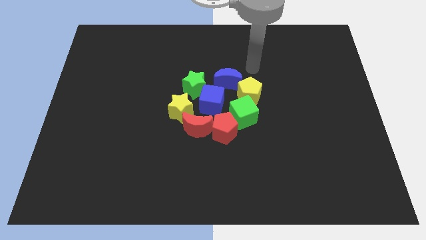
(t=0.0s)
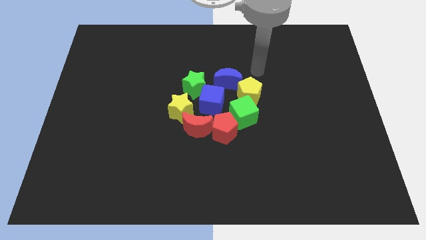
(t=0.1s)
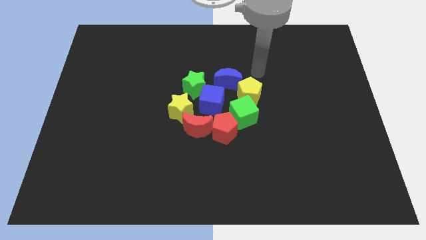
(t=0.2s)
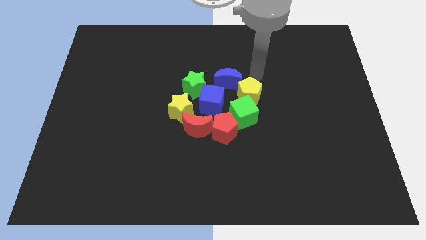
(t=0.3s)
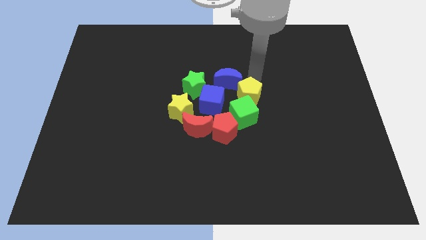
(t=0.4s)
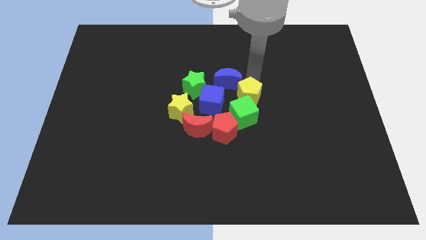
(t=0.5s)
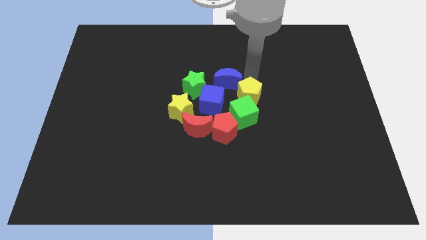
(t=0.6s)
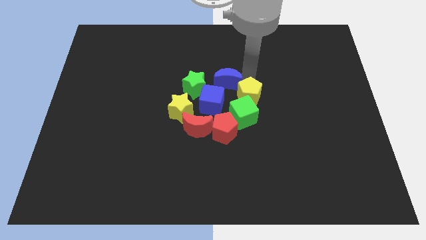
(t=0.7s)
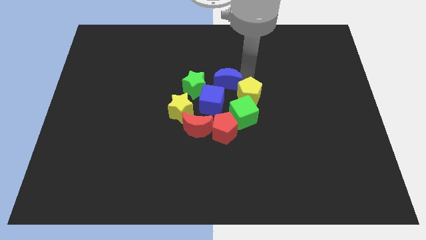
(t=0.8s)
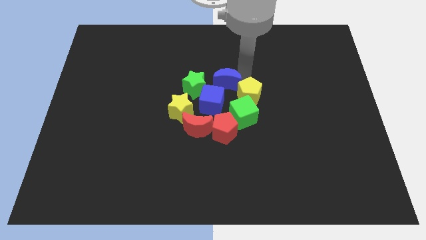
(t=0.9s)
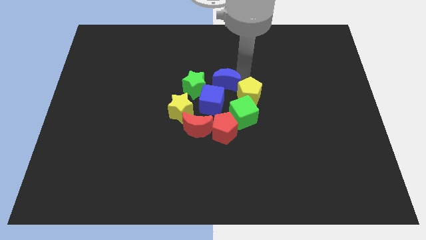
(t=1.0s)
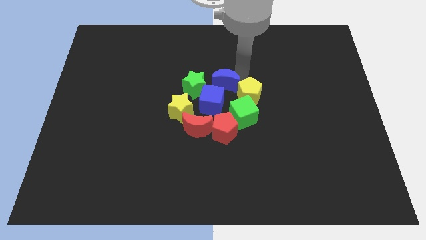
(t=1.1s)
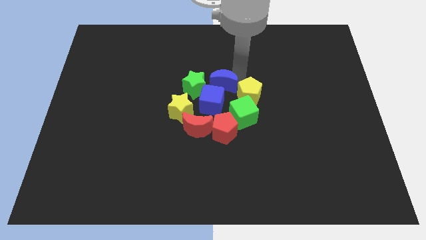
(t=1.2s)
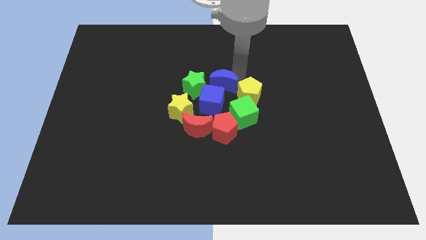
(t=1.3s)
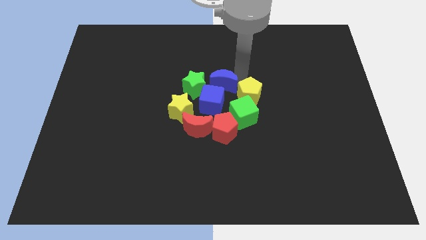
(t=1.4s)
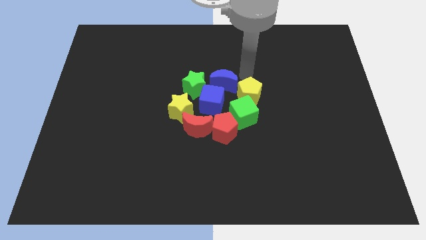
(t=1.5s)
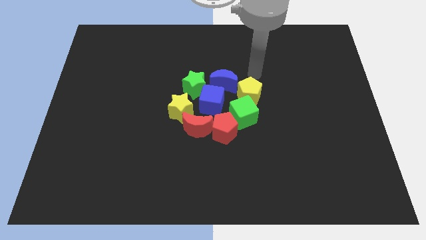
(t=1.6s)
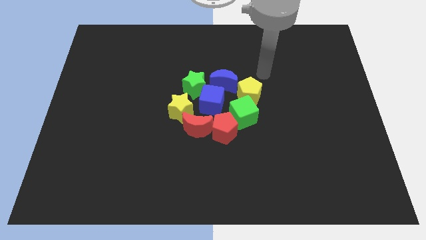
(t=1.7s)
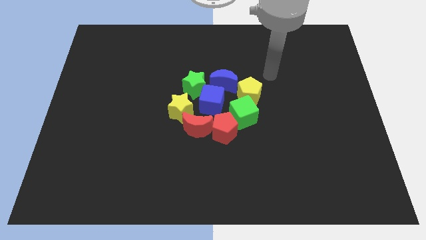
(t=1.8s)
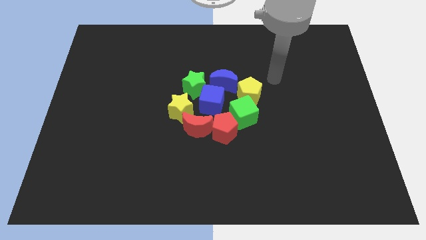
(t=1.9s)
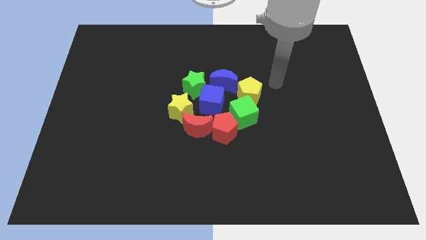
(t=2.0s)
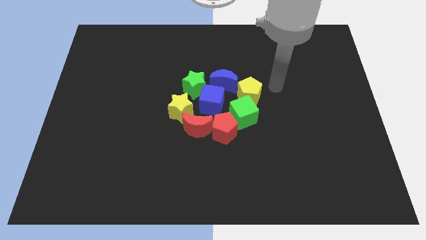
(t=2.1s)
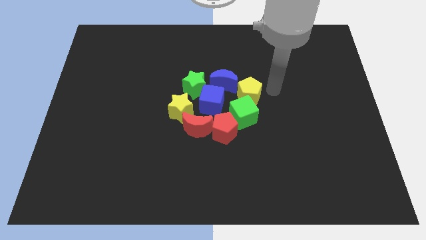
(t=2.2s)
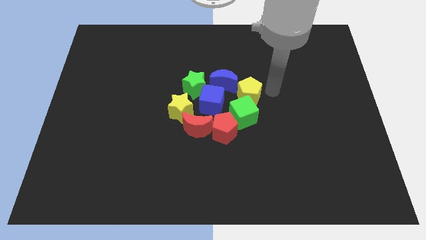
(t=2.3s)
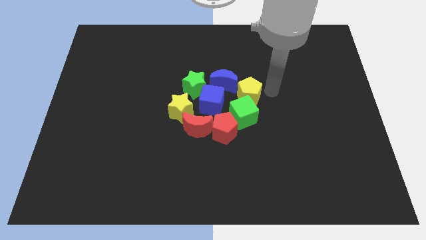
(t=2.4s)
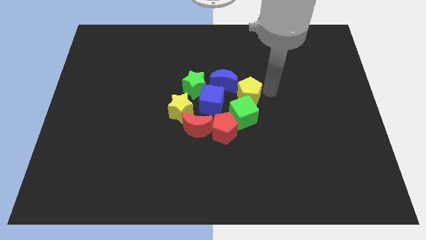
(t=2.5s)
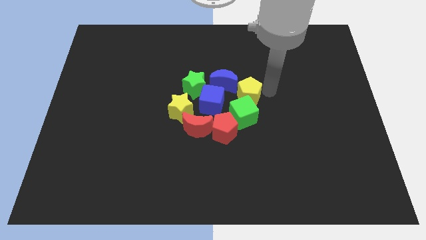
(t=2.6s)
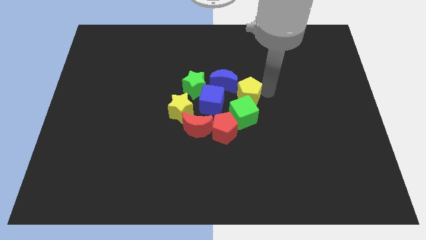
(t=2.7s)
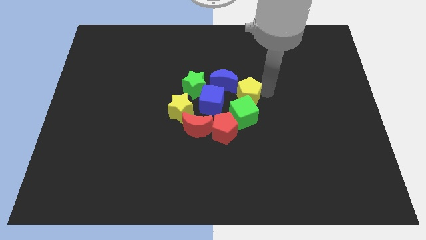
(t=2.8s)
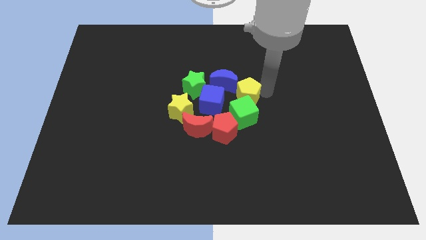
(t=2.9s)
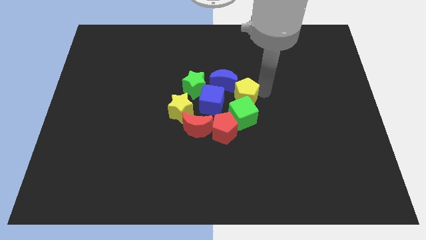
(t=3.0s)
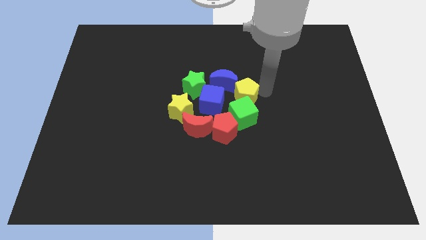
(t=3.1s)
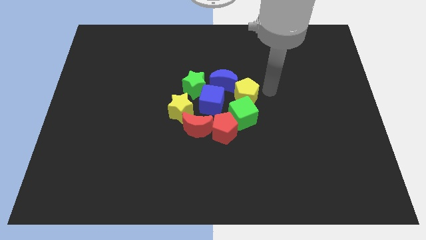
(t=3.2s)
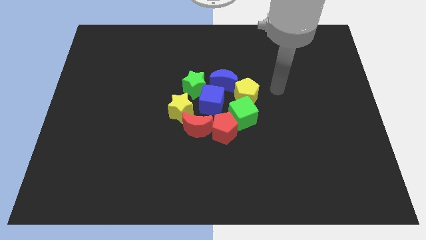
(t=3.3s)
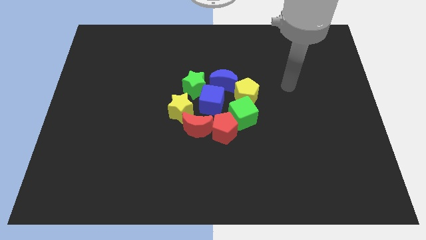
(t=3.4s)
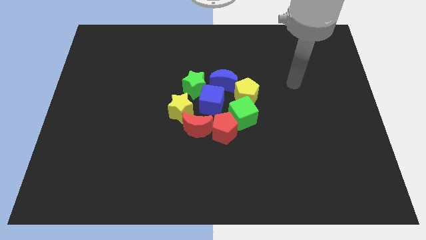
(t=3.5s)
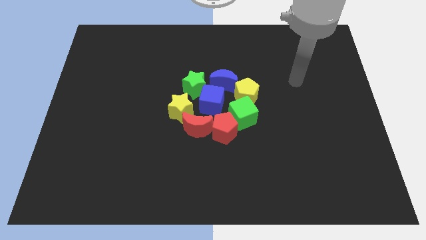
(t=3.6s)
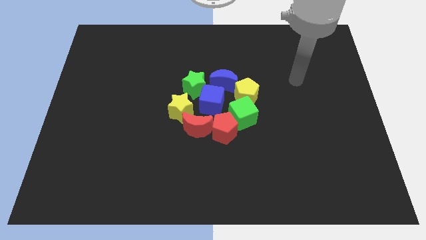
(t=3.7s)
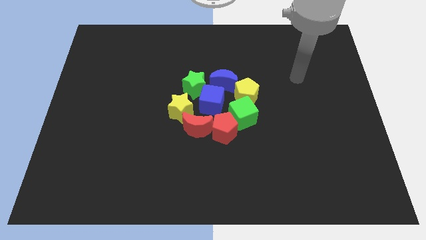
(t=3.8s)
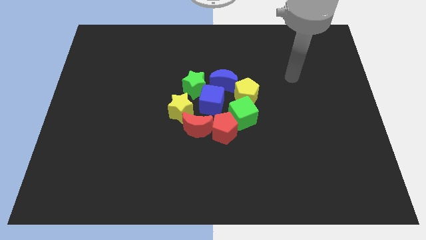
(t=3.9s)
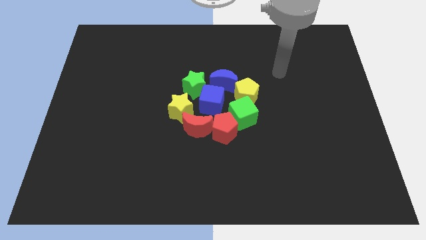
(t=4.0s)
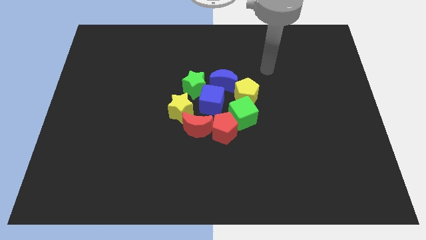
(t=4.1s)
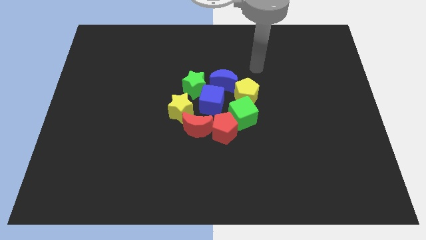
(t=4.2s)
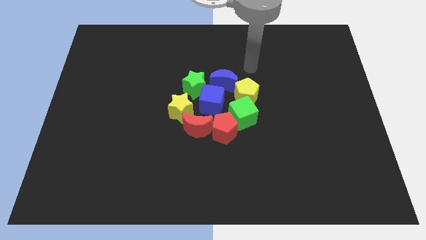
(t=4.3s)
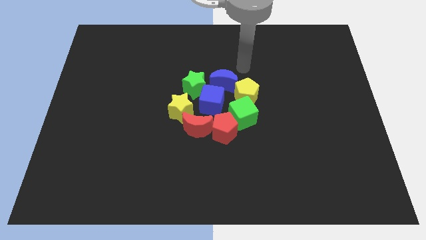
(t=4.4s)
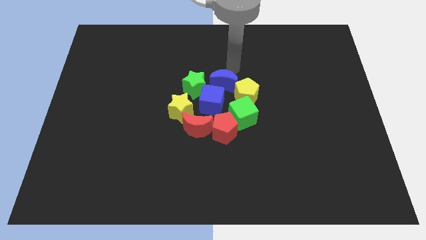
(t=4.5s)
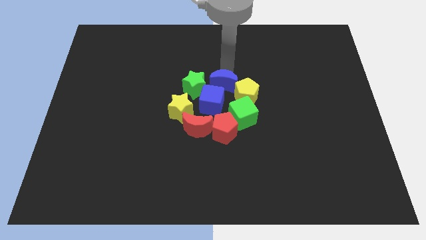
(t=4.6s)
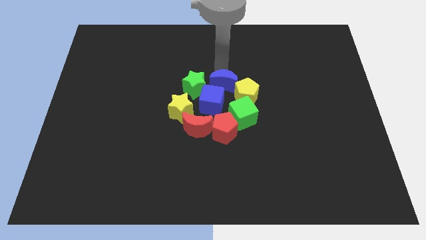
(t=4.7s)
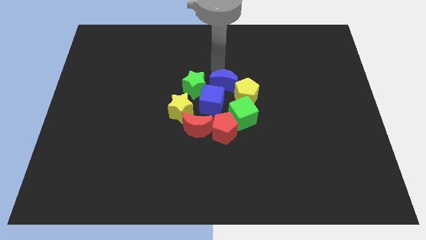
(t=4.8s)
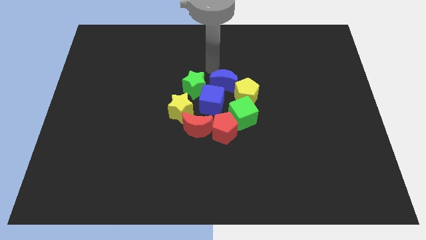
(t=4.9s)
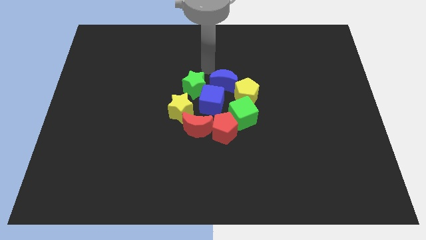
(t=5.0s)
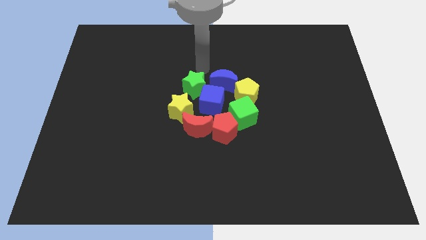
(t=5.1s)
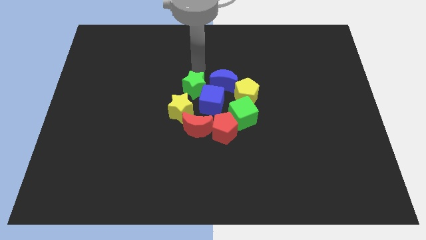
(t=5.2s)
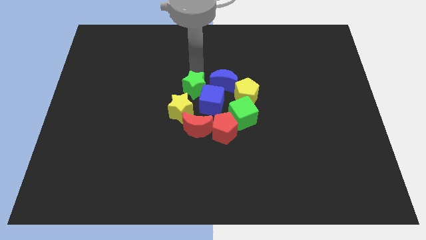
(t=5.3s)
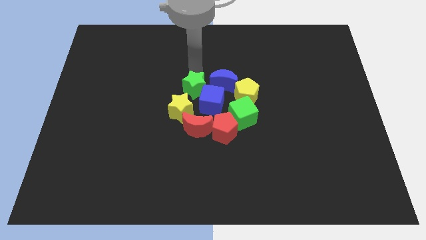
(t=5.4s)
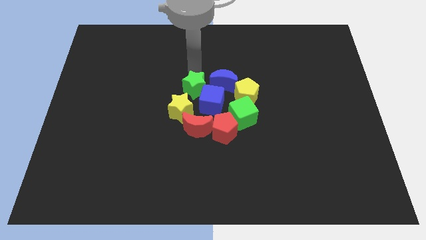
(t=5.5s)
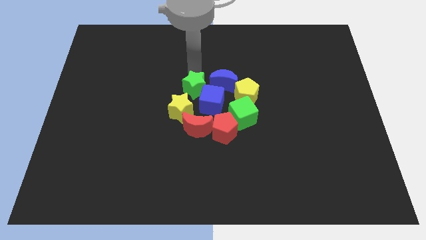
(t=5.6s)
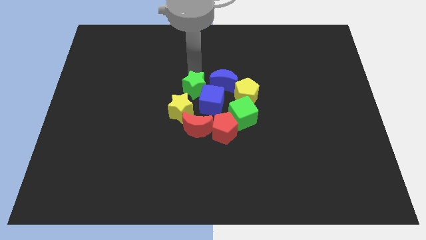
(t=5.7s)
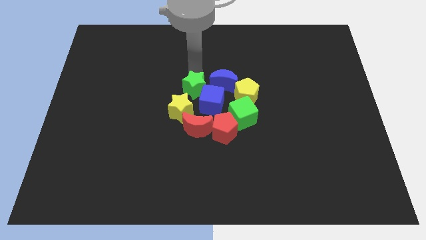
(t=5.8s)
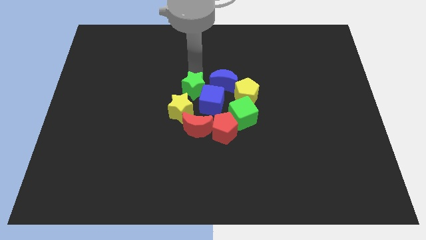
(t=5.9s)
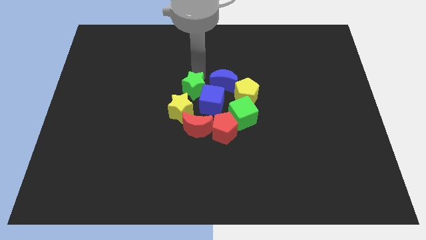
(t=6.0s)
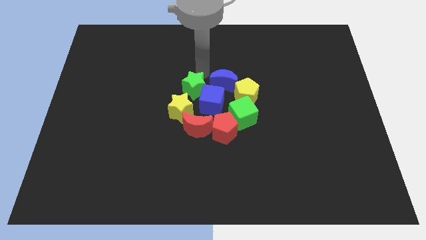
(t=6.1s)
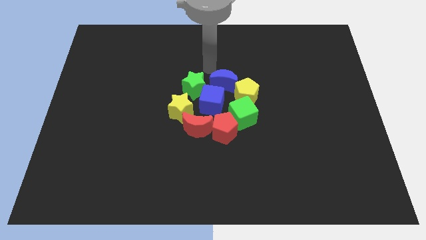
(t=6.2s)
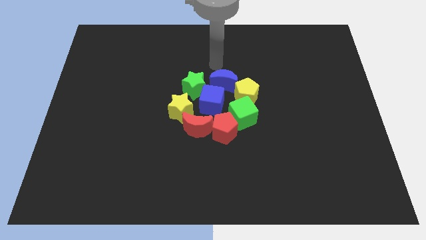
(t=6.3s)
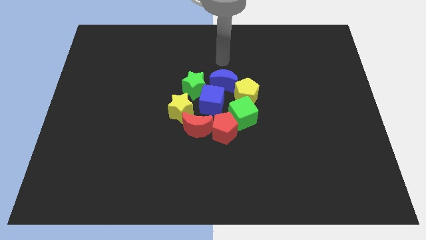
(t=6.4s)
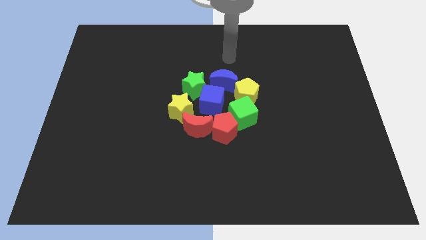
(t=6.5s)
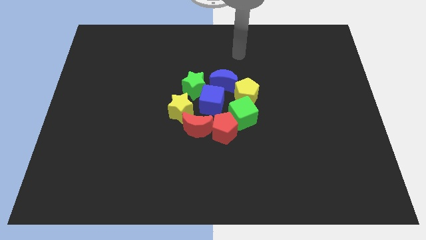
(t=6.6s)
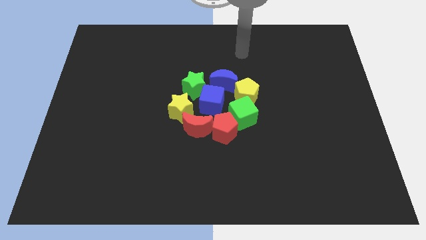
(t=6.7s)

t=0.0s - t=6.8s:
move slightly the yellow pentagon and green star towards the center of the board

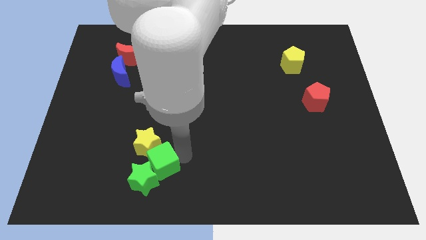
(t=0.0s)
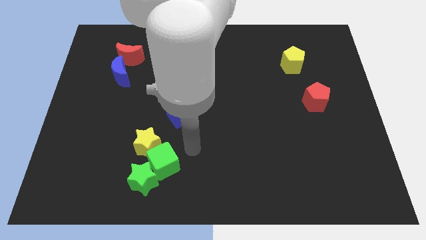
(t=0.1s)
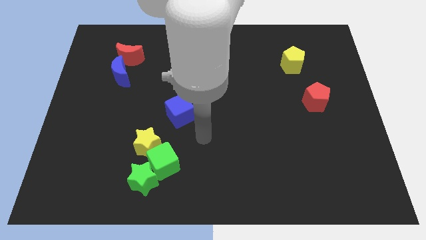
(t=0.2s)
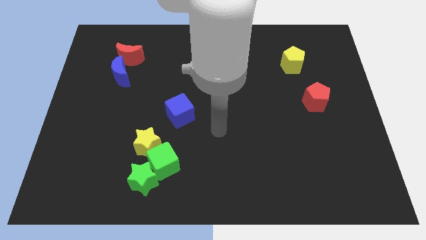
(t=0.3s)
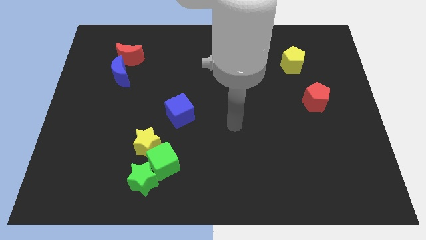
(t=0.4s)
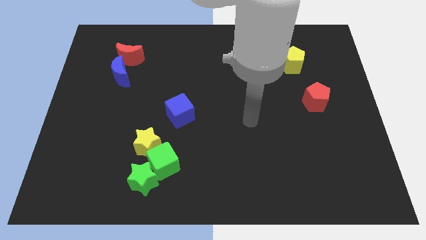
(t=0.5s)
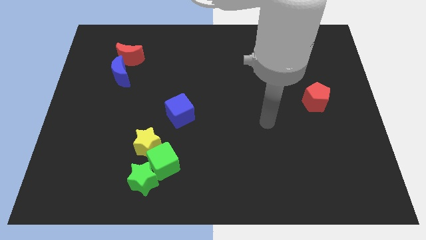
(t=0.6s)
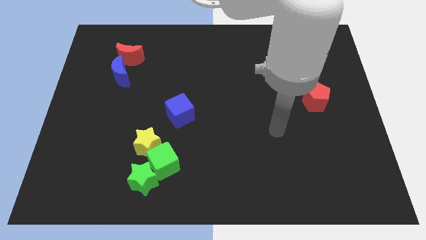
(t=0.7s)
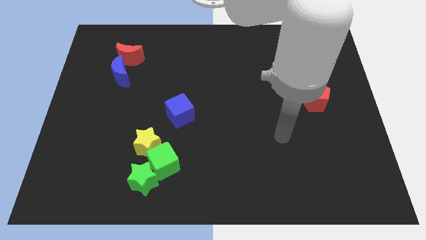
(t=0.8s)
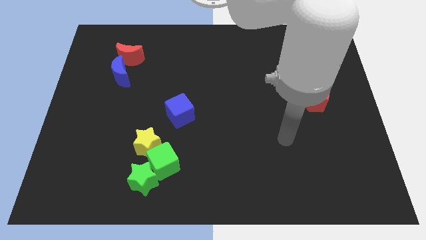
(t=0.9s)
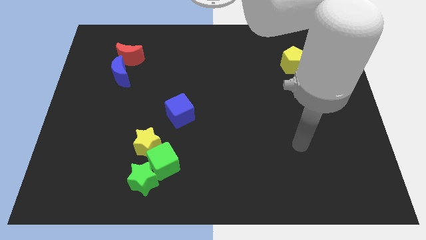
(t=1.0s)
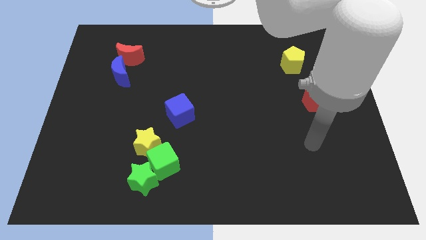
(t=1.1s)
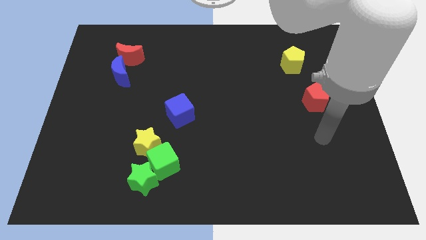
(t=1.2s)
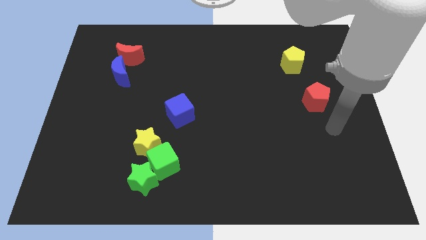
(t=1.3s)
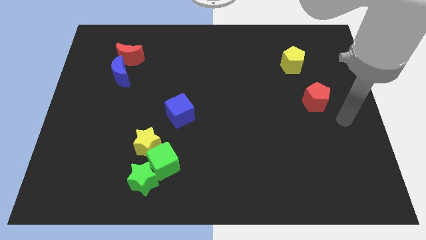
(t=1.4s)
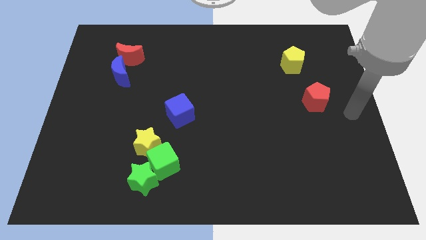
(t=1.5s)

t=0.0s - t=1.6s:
move the arm away from the green cube

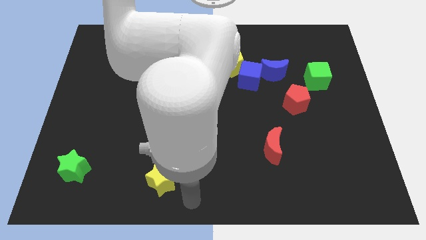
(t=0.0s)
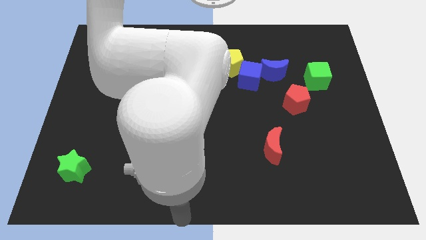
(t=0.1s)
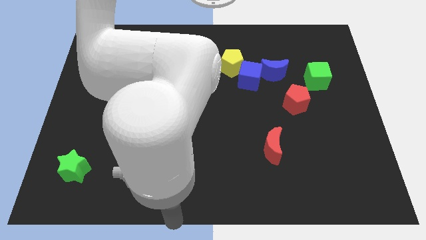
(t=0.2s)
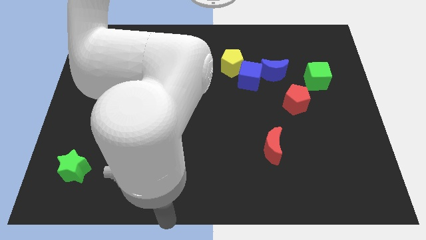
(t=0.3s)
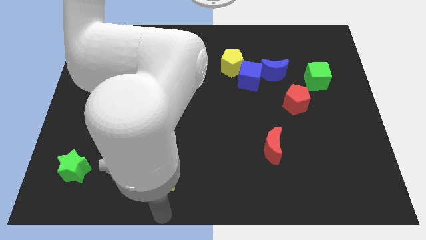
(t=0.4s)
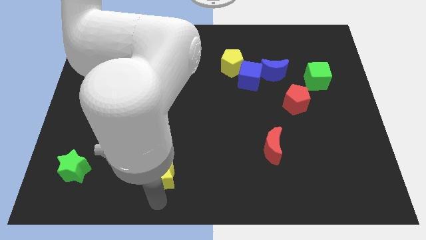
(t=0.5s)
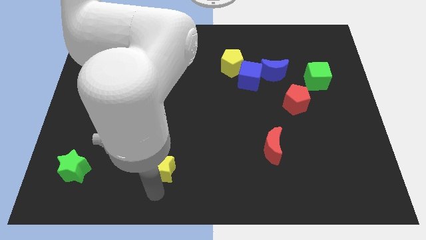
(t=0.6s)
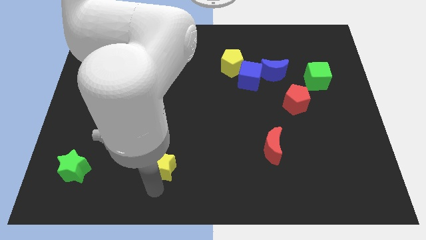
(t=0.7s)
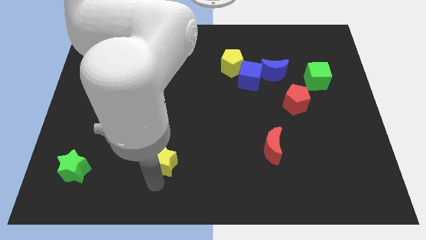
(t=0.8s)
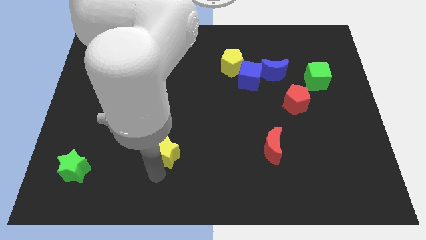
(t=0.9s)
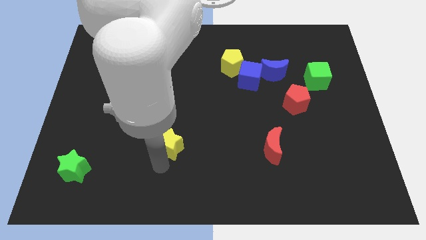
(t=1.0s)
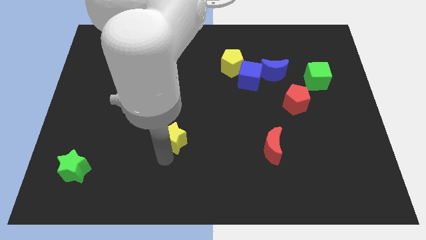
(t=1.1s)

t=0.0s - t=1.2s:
place the yellow star to the left of the red moon
